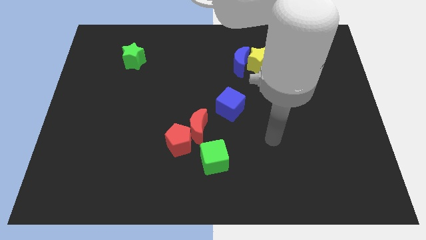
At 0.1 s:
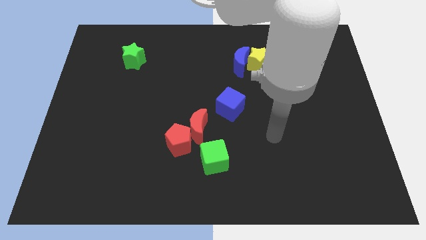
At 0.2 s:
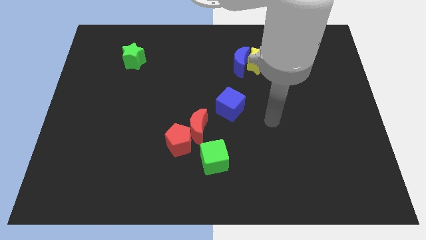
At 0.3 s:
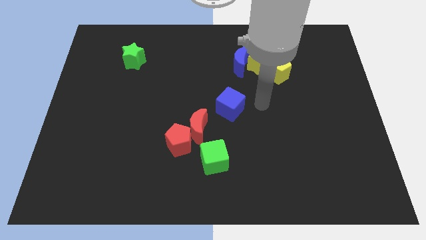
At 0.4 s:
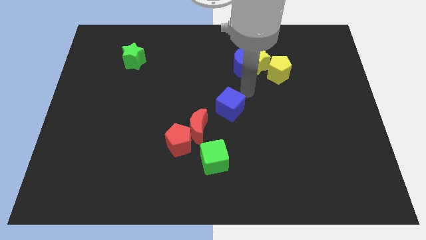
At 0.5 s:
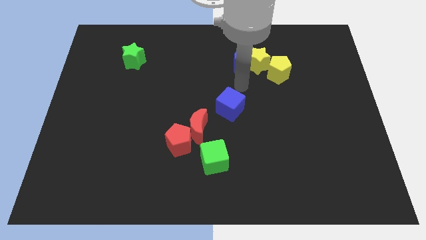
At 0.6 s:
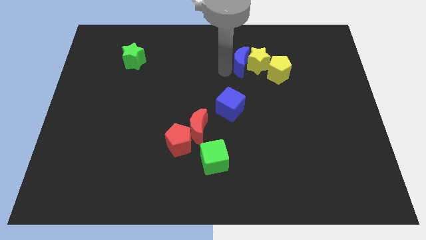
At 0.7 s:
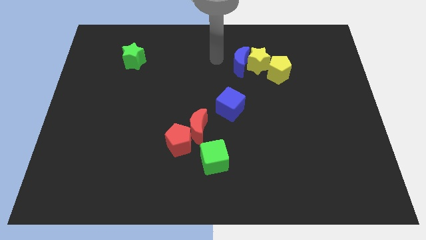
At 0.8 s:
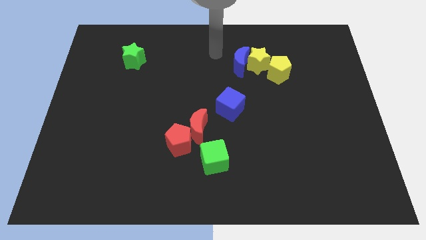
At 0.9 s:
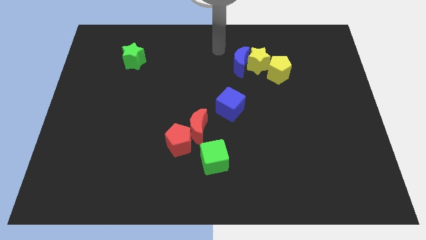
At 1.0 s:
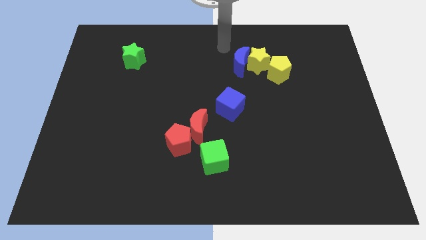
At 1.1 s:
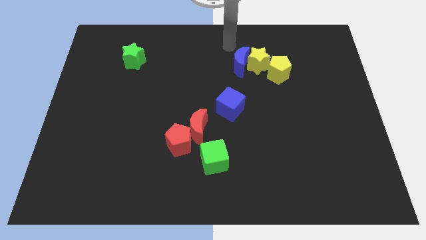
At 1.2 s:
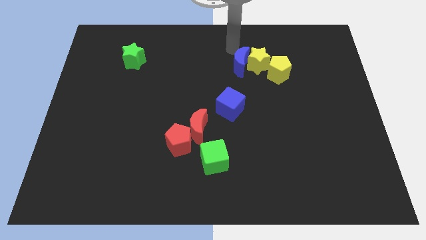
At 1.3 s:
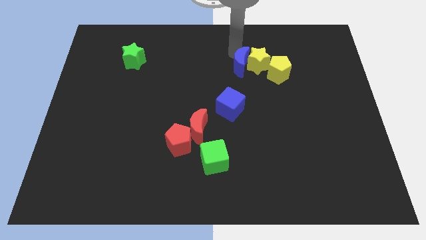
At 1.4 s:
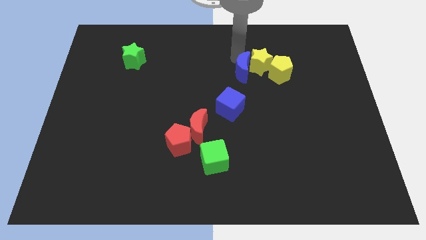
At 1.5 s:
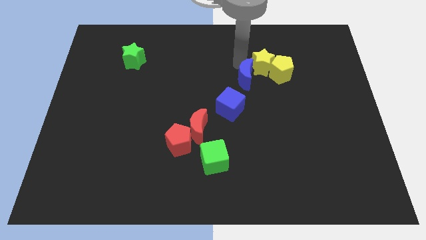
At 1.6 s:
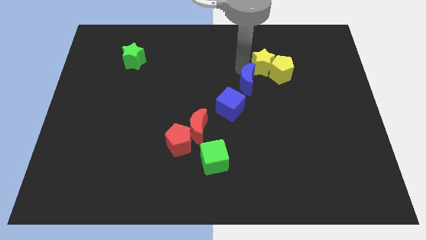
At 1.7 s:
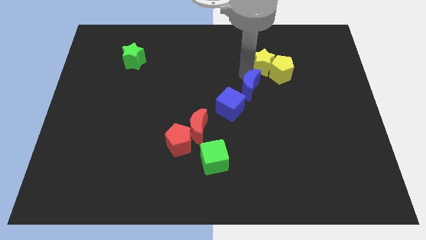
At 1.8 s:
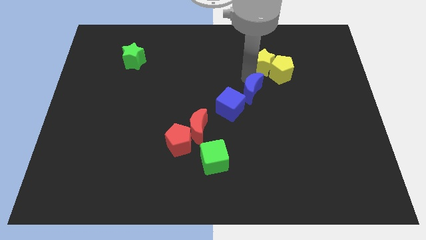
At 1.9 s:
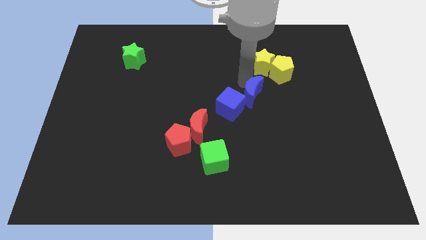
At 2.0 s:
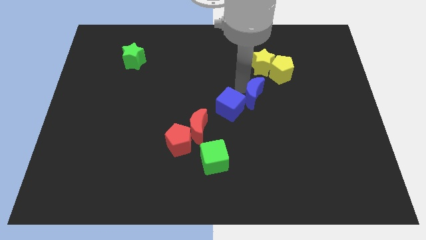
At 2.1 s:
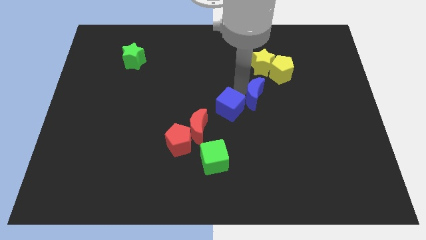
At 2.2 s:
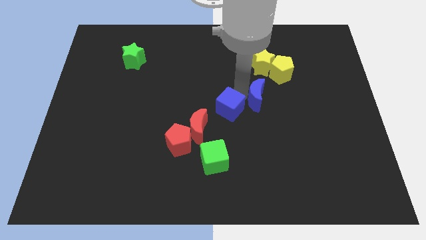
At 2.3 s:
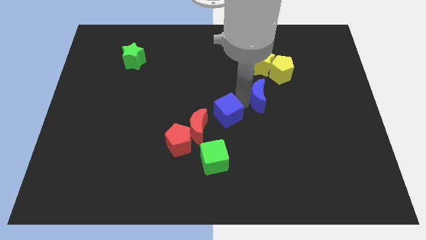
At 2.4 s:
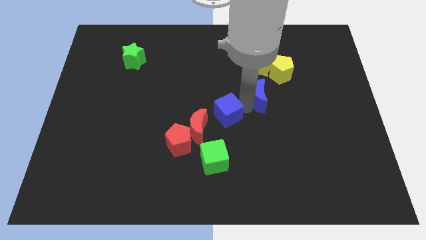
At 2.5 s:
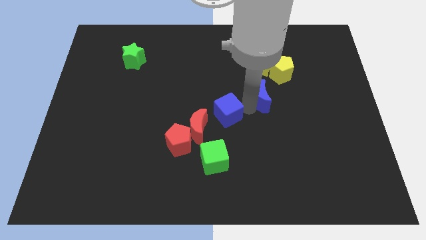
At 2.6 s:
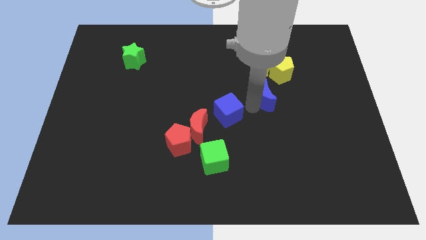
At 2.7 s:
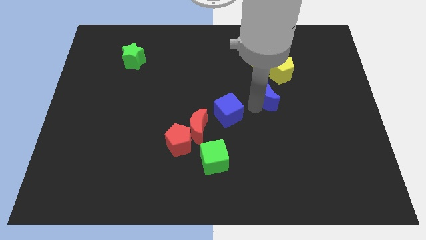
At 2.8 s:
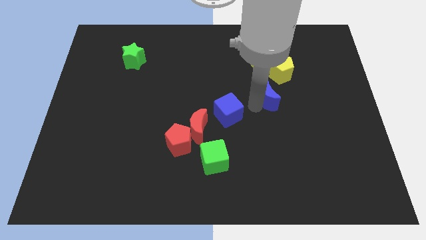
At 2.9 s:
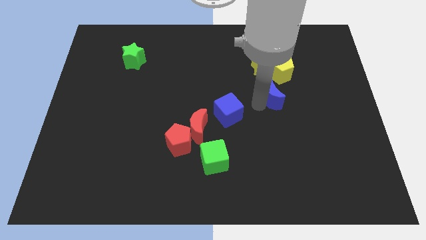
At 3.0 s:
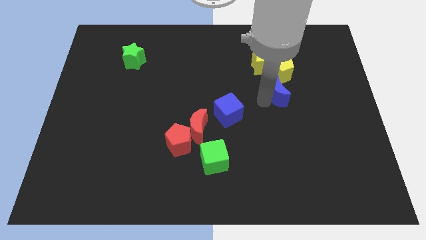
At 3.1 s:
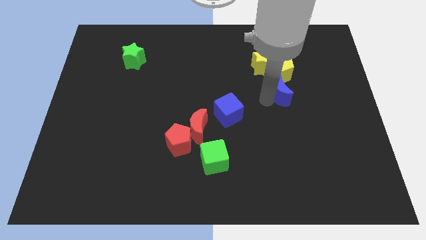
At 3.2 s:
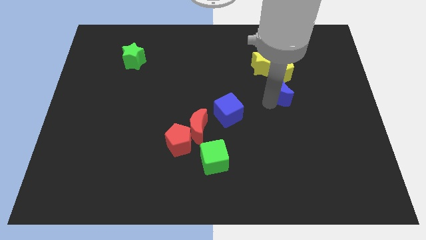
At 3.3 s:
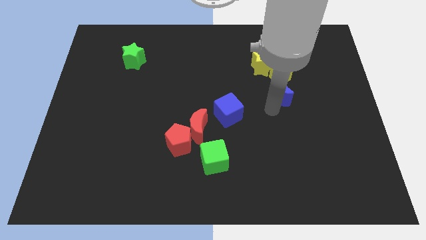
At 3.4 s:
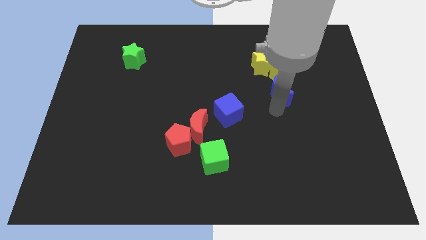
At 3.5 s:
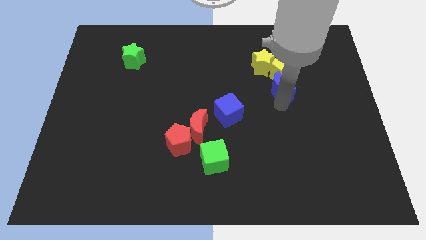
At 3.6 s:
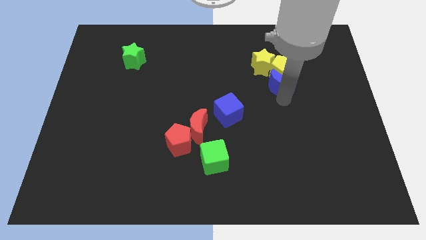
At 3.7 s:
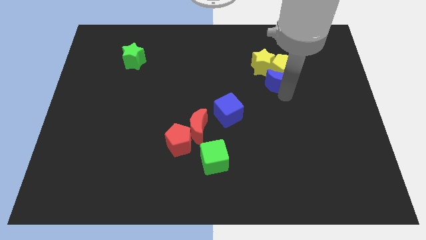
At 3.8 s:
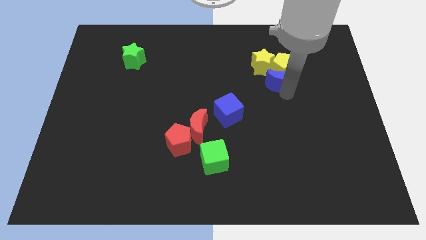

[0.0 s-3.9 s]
move the blue moon close to the yellow pentagon

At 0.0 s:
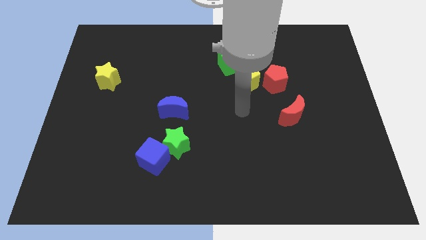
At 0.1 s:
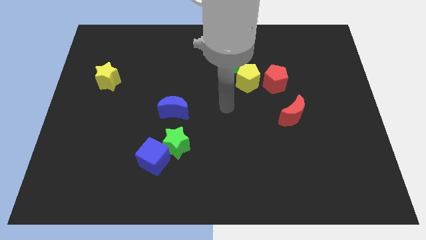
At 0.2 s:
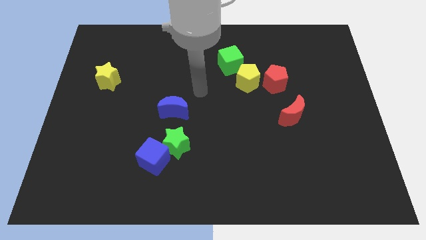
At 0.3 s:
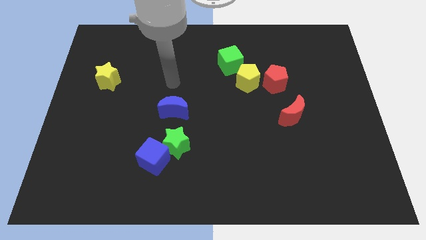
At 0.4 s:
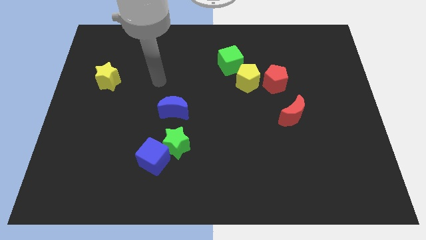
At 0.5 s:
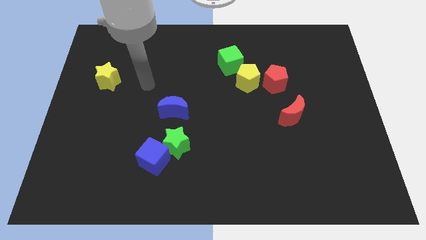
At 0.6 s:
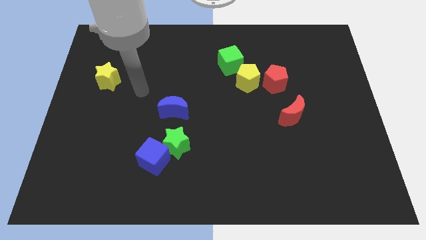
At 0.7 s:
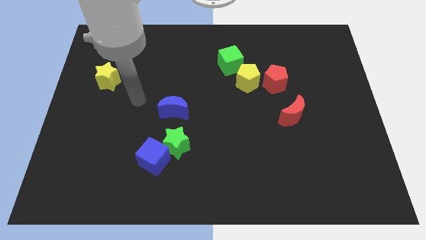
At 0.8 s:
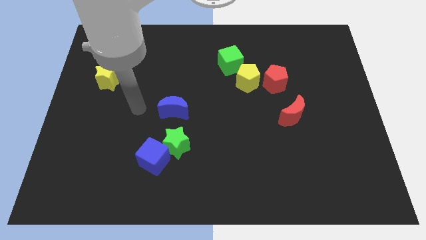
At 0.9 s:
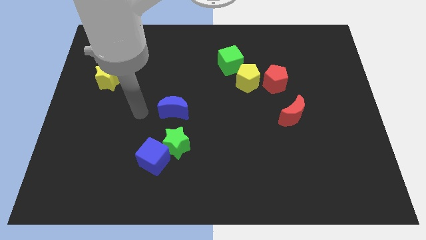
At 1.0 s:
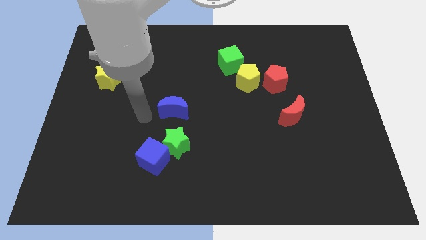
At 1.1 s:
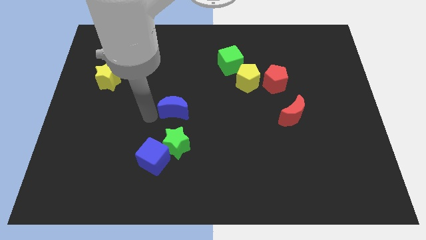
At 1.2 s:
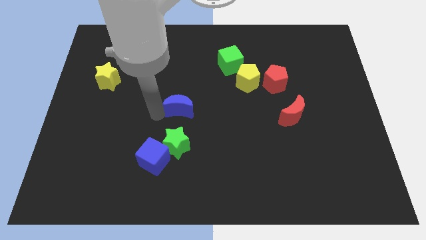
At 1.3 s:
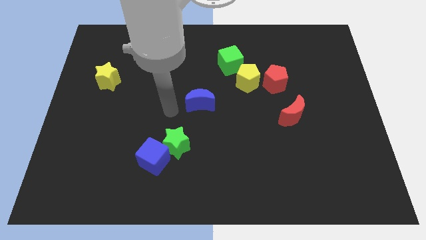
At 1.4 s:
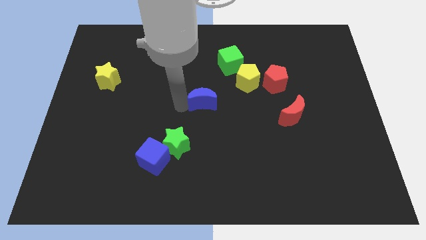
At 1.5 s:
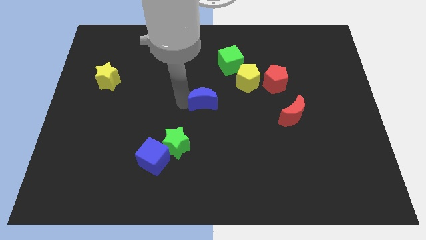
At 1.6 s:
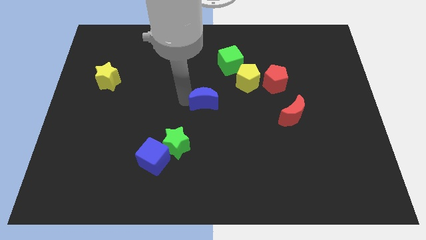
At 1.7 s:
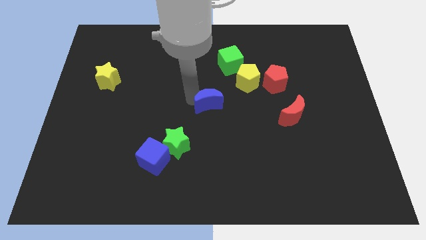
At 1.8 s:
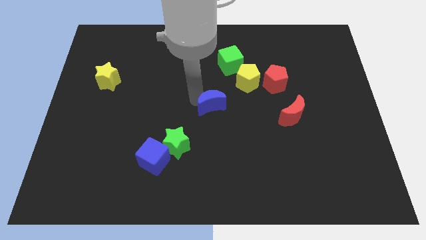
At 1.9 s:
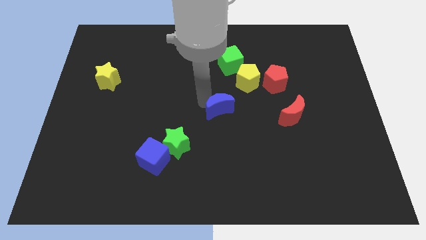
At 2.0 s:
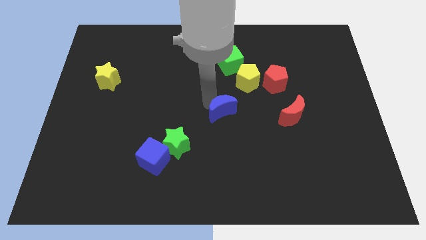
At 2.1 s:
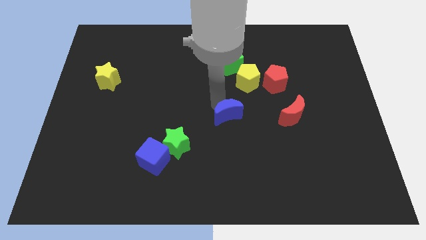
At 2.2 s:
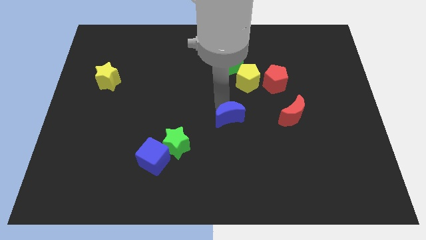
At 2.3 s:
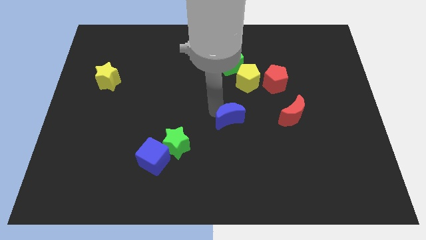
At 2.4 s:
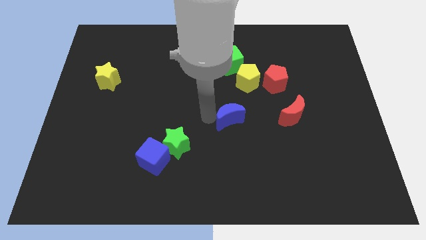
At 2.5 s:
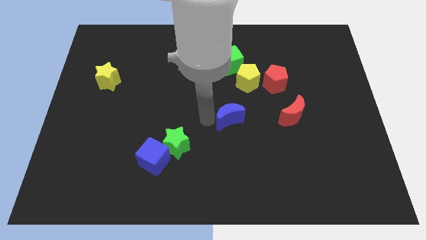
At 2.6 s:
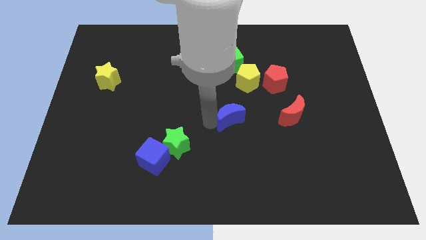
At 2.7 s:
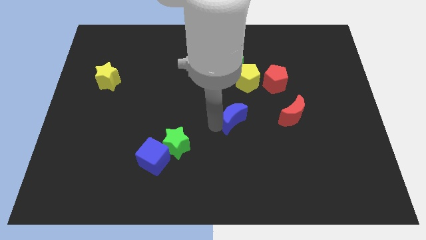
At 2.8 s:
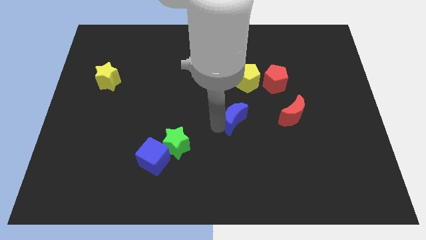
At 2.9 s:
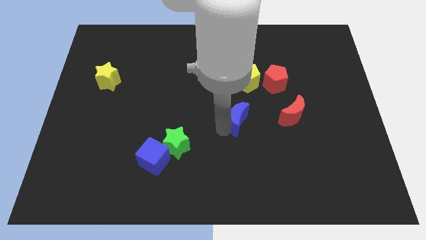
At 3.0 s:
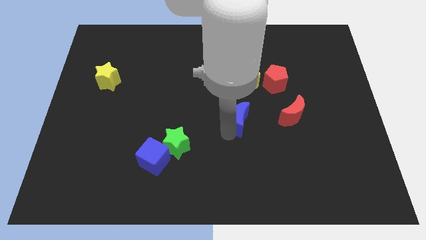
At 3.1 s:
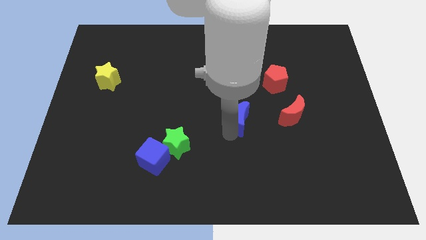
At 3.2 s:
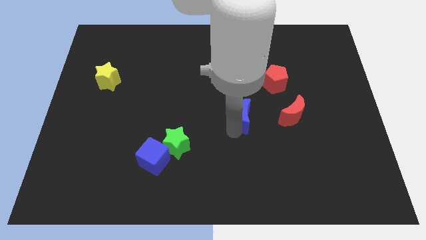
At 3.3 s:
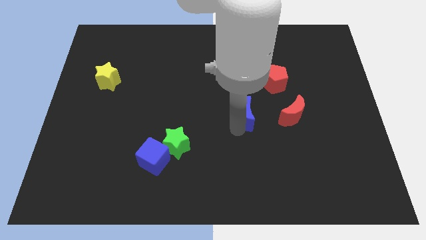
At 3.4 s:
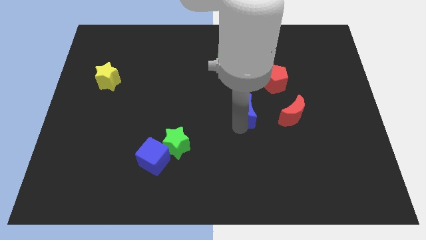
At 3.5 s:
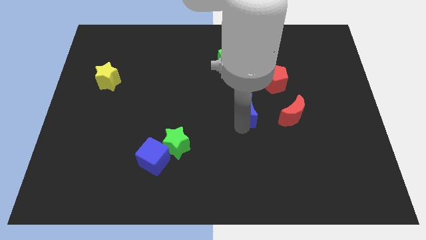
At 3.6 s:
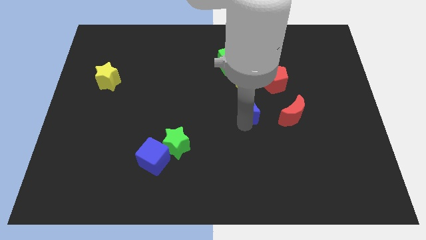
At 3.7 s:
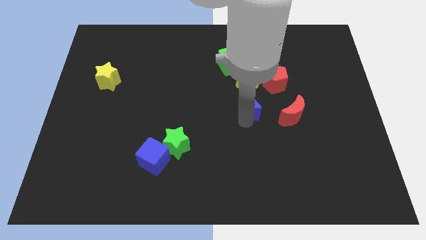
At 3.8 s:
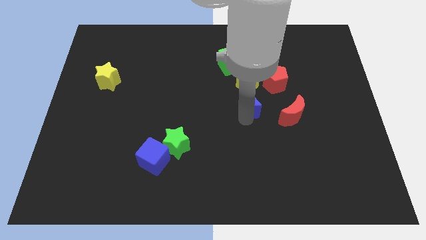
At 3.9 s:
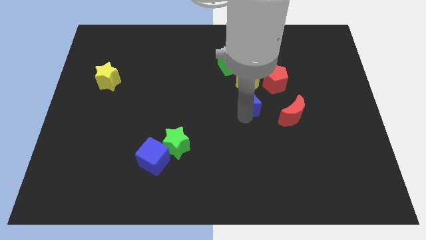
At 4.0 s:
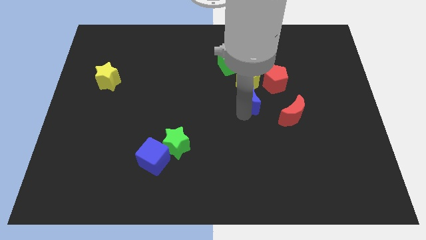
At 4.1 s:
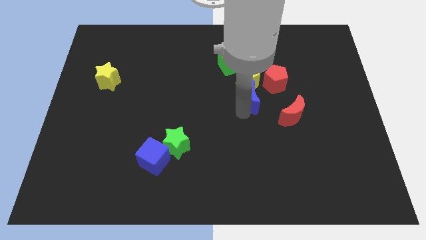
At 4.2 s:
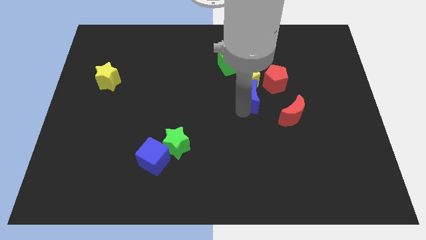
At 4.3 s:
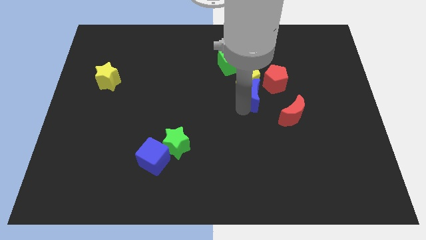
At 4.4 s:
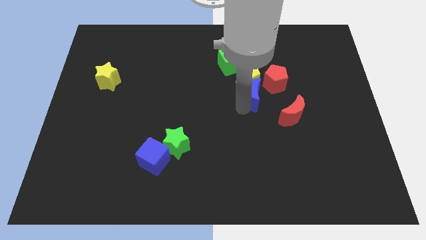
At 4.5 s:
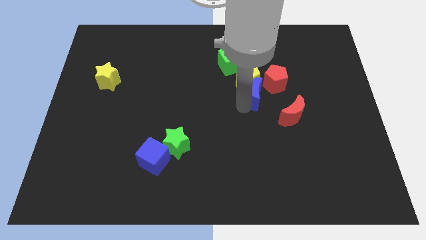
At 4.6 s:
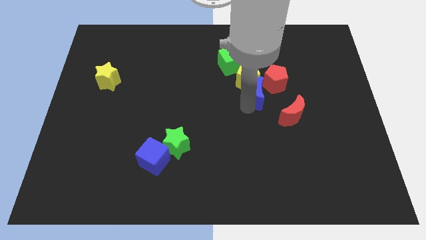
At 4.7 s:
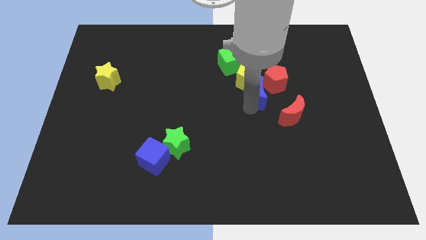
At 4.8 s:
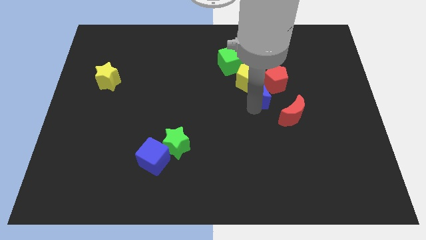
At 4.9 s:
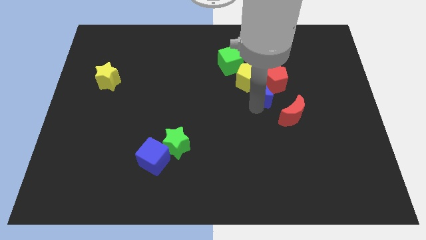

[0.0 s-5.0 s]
slide the blue moon to the red pentagon
